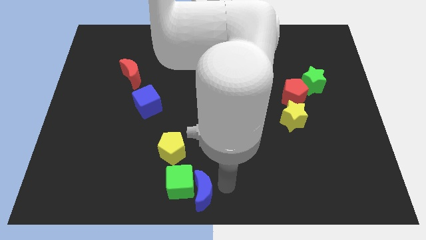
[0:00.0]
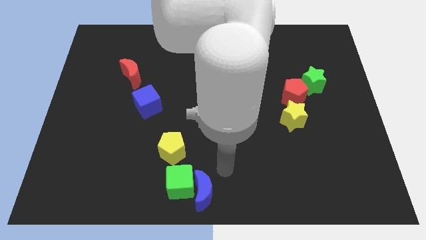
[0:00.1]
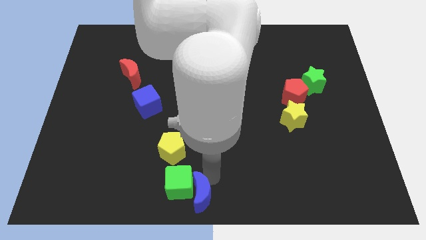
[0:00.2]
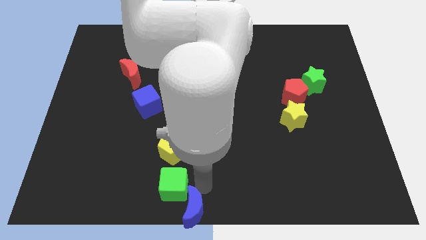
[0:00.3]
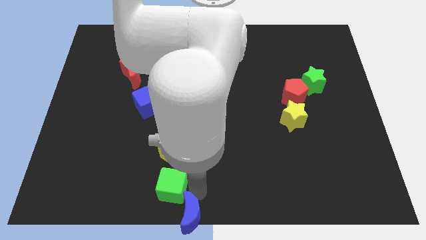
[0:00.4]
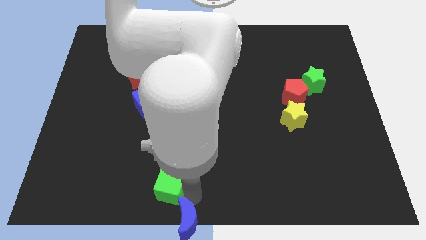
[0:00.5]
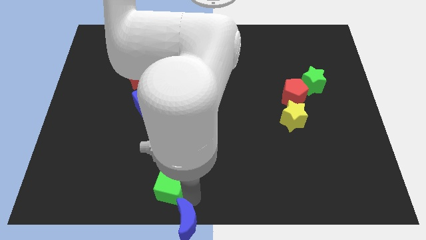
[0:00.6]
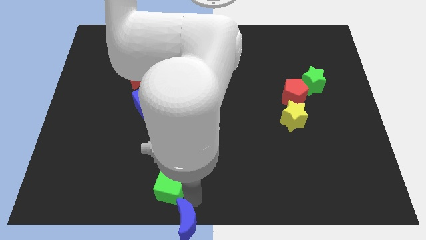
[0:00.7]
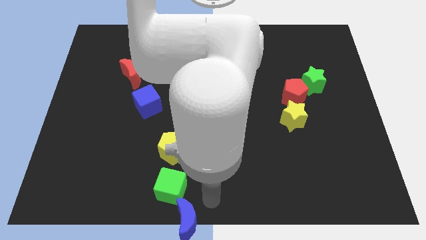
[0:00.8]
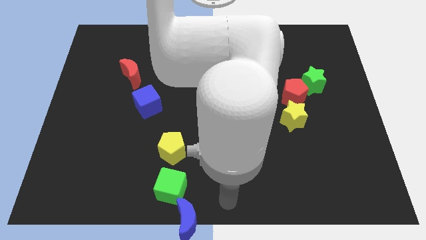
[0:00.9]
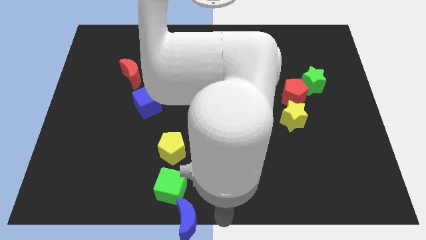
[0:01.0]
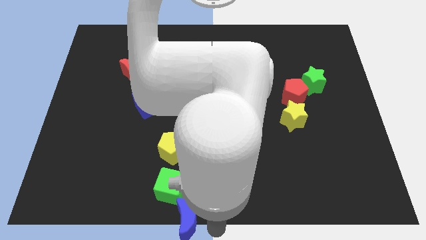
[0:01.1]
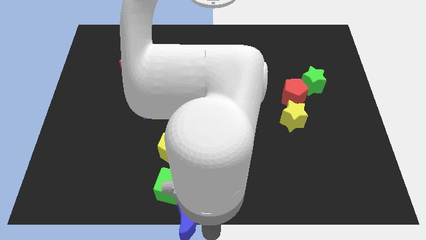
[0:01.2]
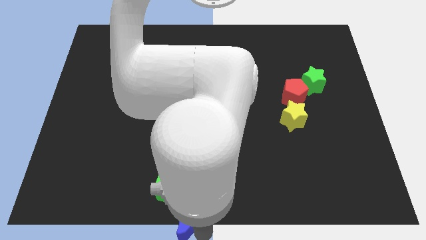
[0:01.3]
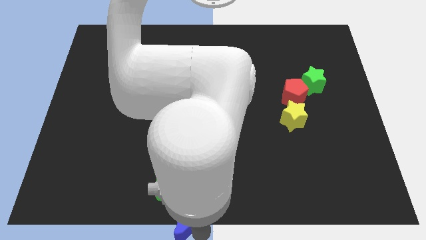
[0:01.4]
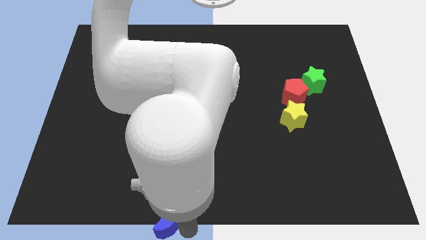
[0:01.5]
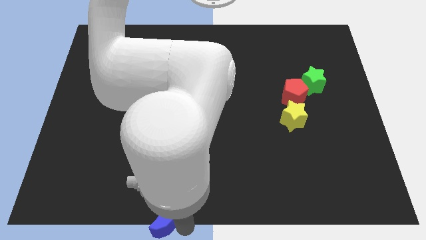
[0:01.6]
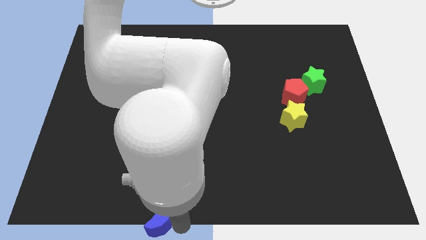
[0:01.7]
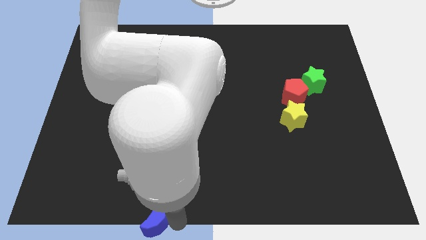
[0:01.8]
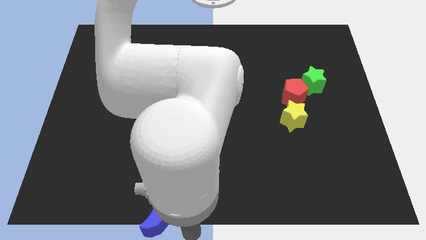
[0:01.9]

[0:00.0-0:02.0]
move the green cube with blue moon

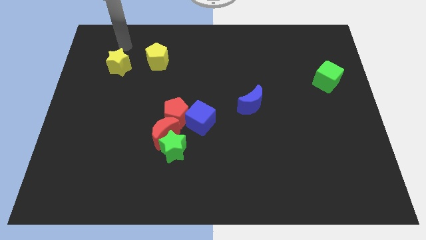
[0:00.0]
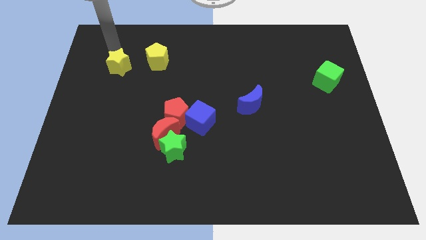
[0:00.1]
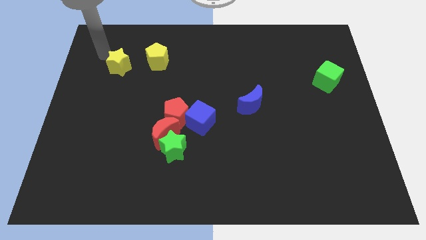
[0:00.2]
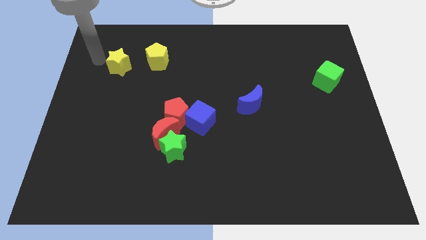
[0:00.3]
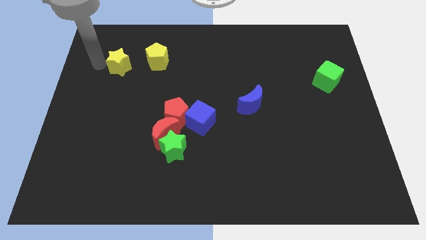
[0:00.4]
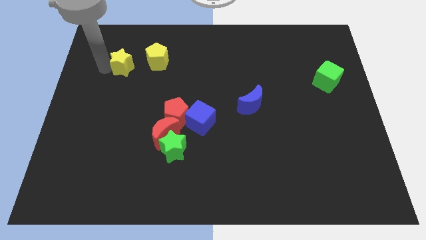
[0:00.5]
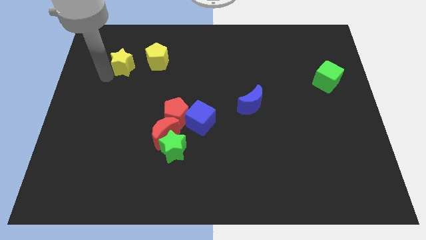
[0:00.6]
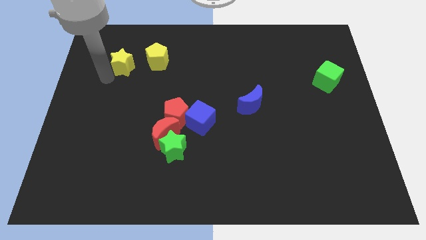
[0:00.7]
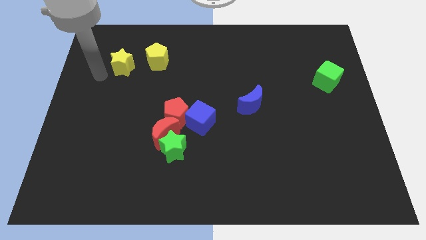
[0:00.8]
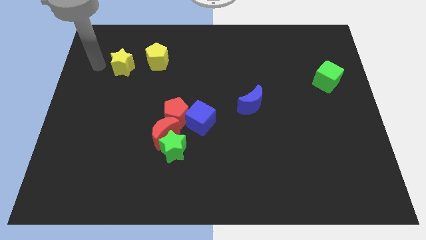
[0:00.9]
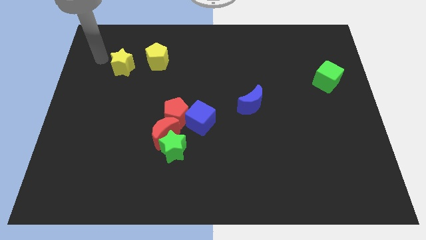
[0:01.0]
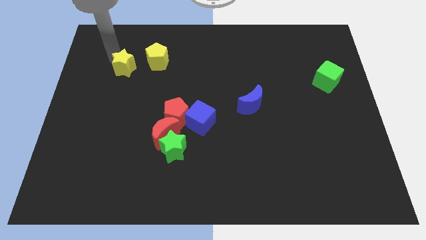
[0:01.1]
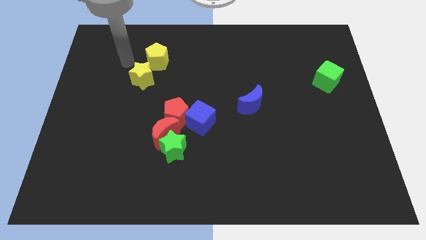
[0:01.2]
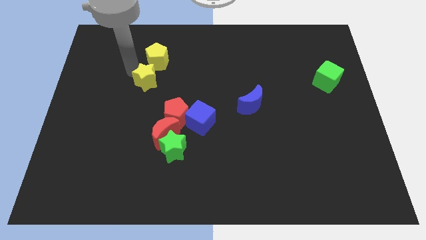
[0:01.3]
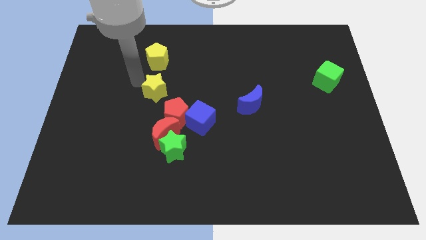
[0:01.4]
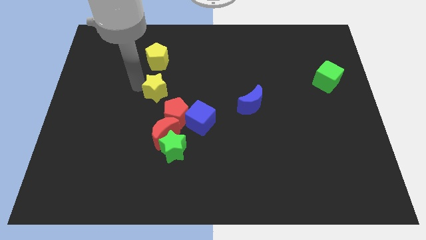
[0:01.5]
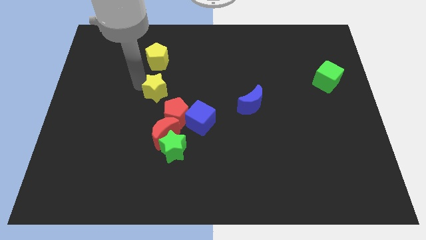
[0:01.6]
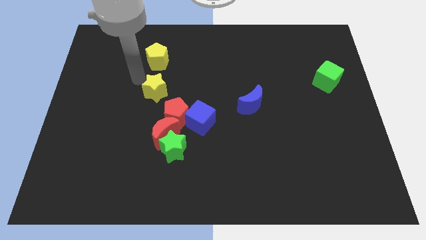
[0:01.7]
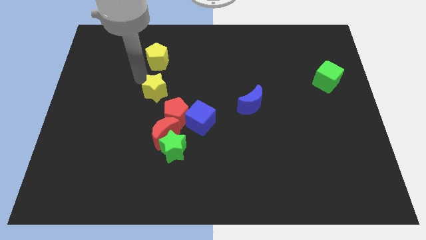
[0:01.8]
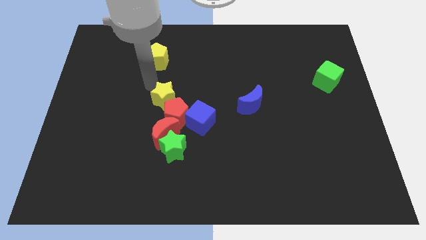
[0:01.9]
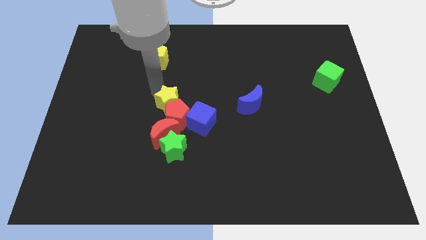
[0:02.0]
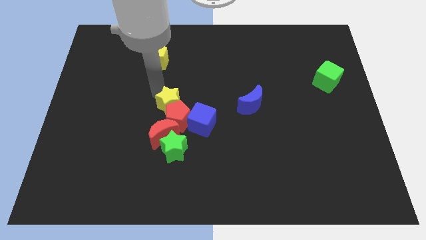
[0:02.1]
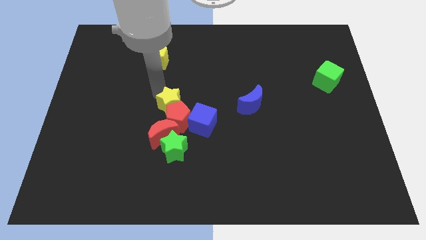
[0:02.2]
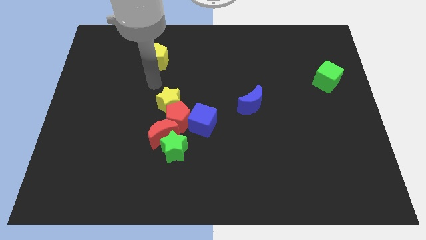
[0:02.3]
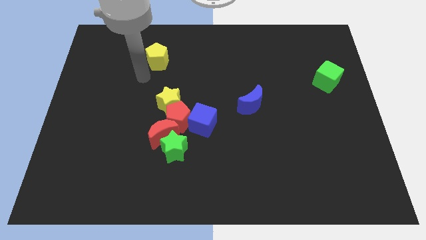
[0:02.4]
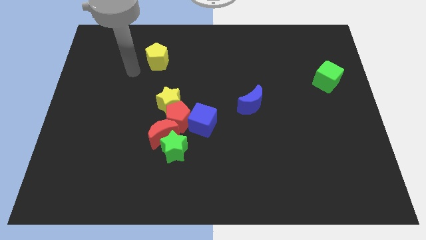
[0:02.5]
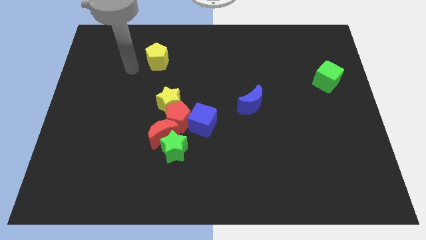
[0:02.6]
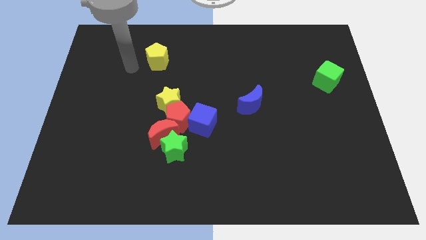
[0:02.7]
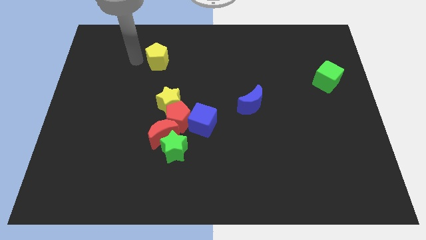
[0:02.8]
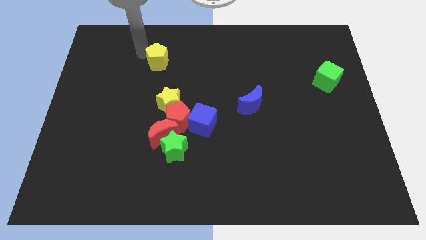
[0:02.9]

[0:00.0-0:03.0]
push the yellow star towards the red blocks

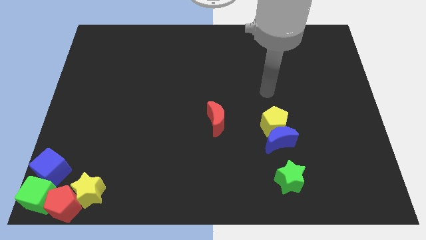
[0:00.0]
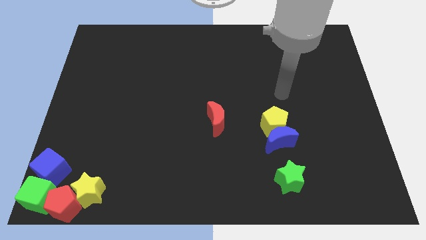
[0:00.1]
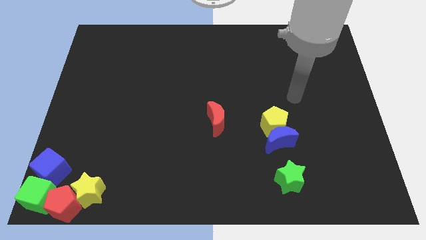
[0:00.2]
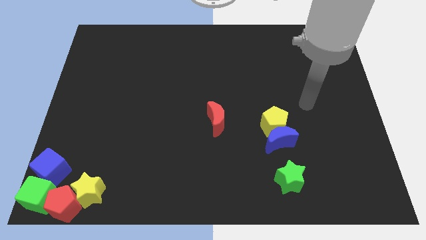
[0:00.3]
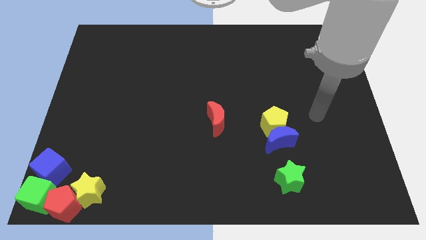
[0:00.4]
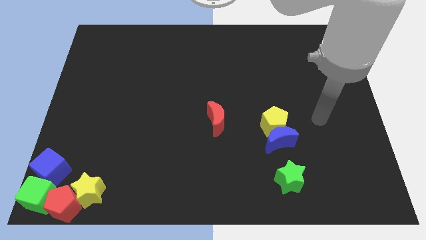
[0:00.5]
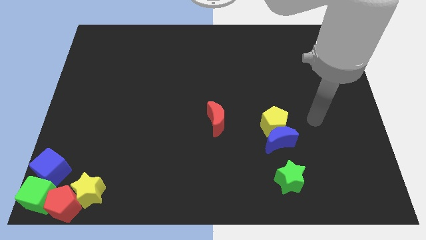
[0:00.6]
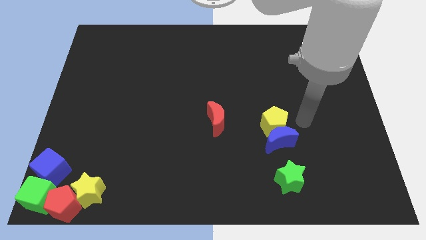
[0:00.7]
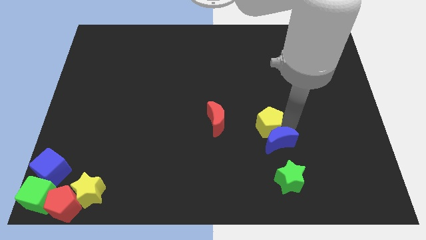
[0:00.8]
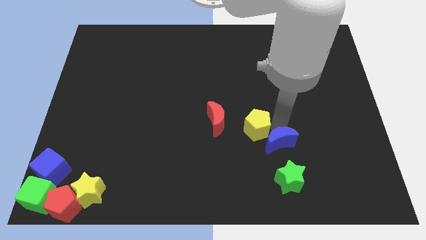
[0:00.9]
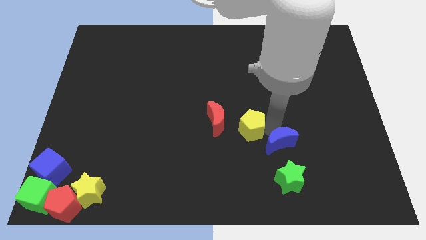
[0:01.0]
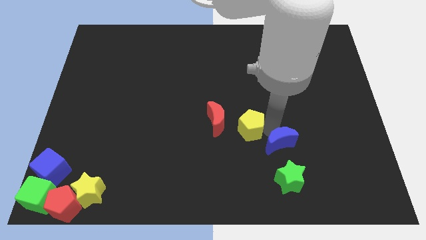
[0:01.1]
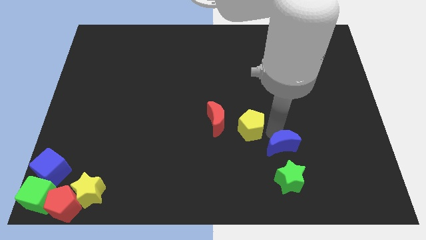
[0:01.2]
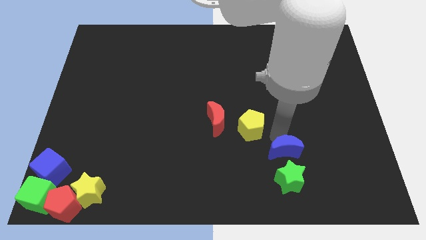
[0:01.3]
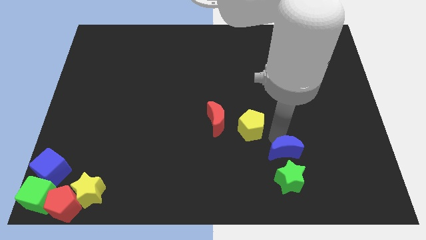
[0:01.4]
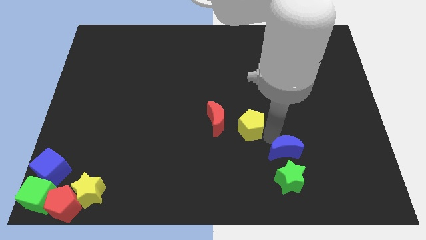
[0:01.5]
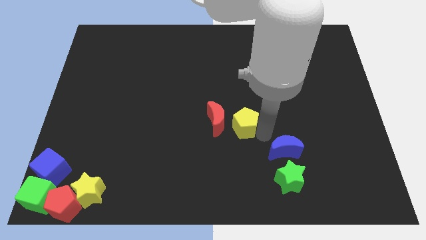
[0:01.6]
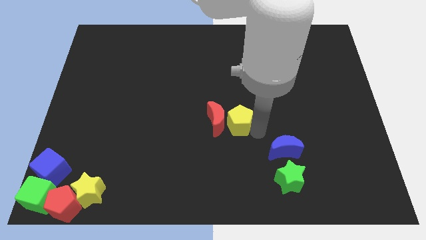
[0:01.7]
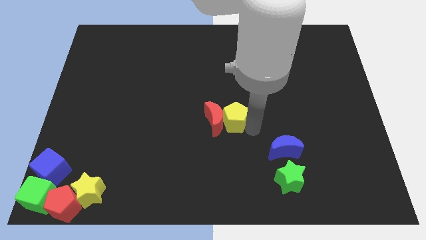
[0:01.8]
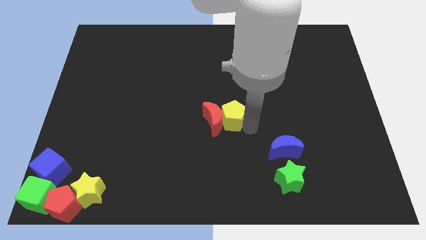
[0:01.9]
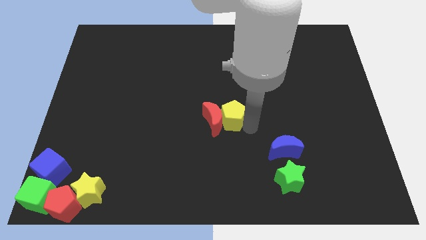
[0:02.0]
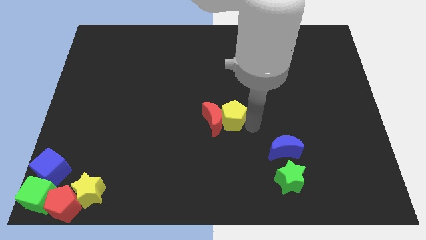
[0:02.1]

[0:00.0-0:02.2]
move the yellow pentagon into the red moon

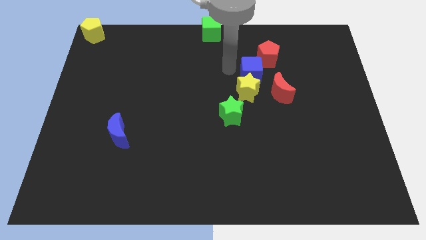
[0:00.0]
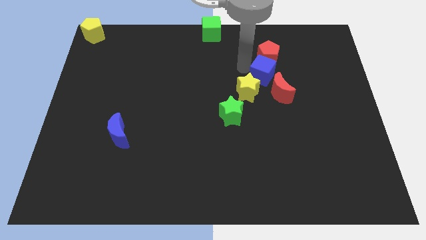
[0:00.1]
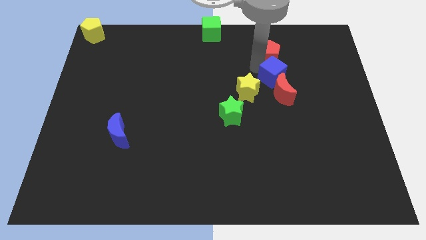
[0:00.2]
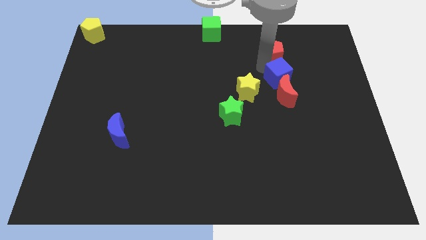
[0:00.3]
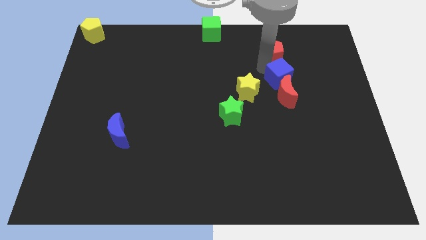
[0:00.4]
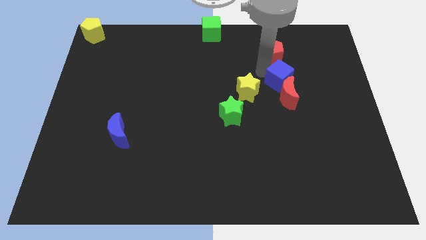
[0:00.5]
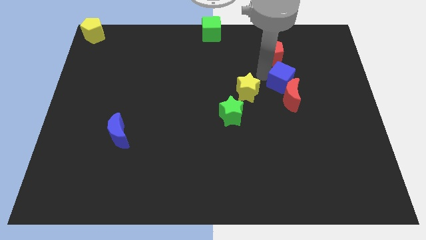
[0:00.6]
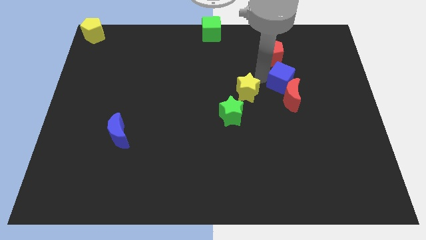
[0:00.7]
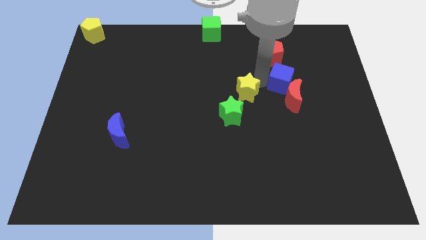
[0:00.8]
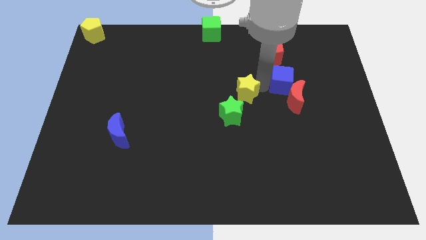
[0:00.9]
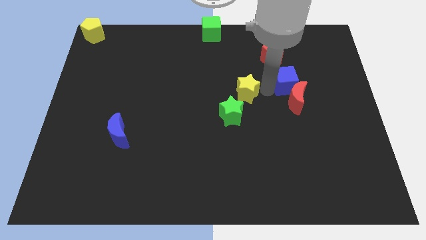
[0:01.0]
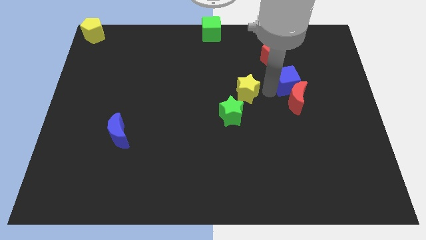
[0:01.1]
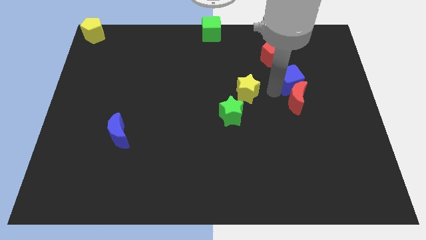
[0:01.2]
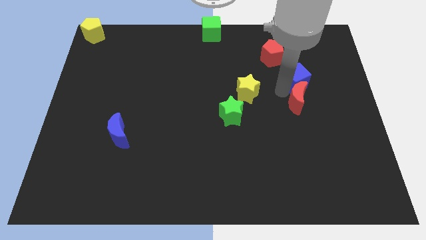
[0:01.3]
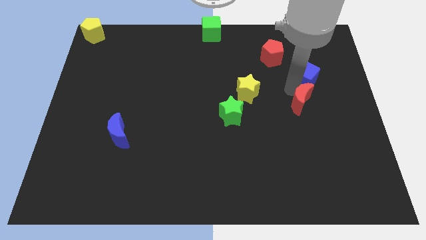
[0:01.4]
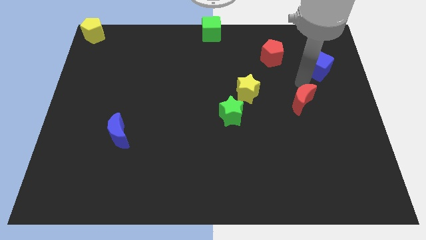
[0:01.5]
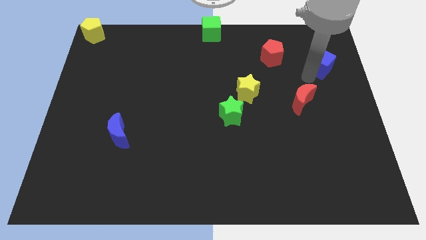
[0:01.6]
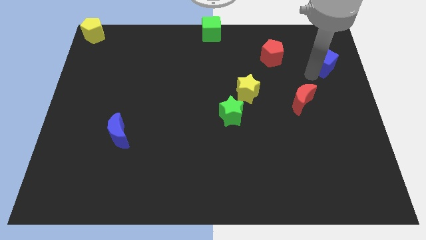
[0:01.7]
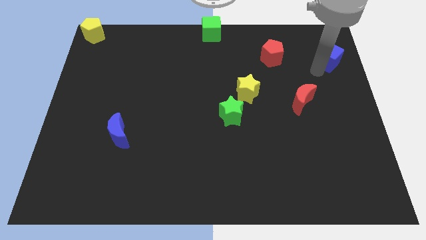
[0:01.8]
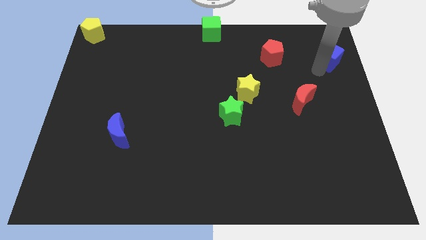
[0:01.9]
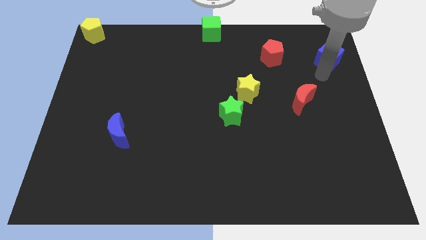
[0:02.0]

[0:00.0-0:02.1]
separate blue cube from yellow star
